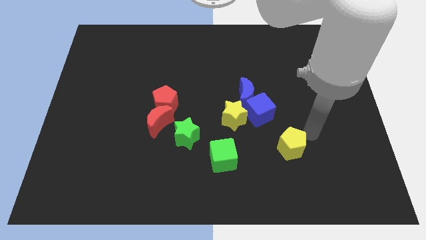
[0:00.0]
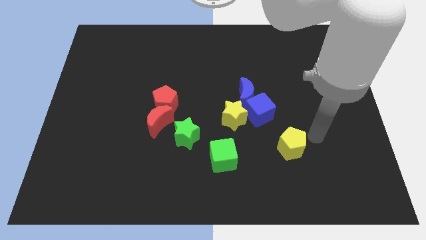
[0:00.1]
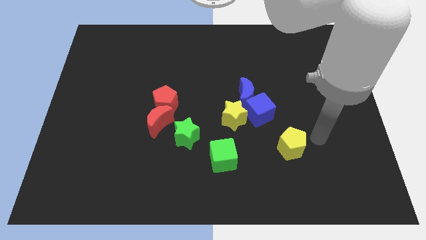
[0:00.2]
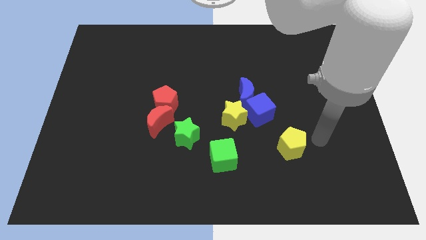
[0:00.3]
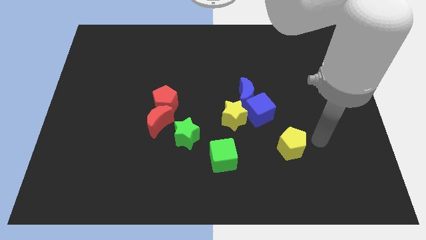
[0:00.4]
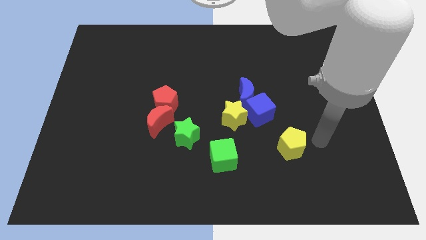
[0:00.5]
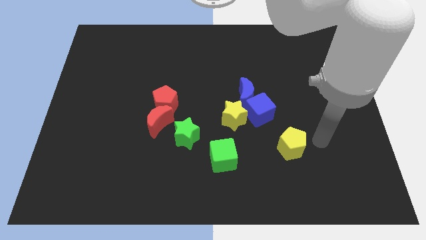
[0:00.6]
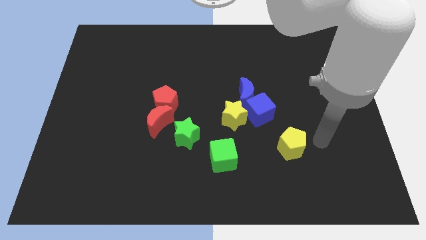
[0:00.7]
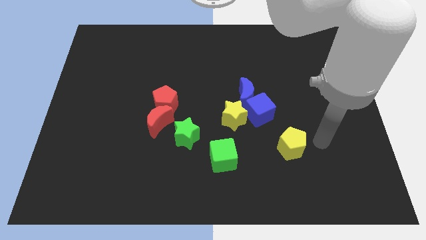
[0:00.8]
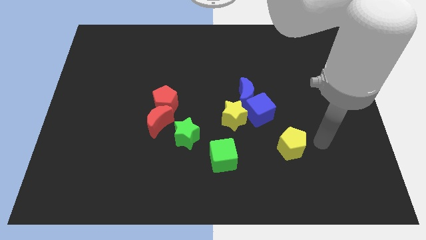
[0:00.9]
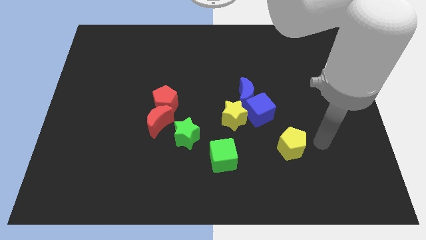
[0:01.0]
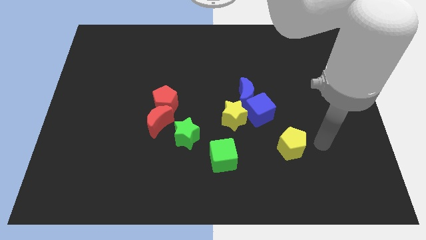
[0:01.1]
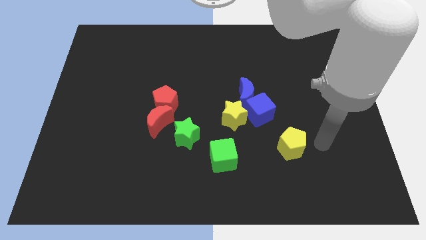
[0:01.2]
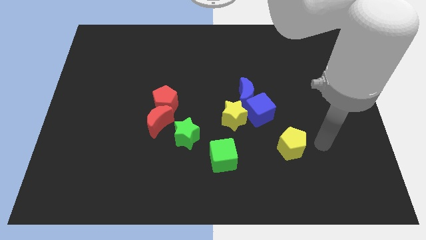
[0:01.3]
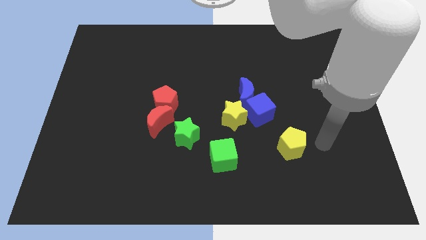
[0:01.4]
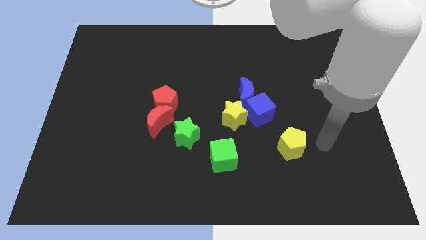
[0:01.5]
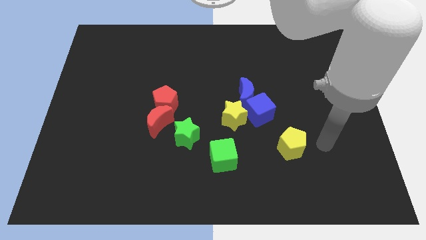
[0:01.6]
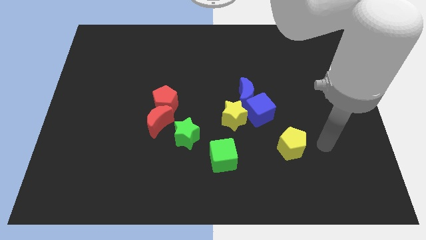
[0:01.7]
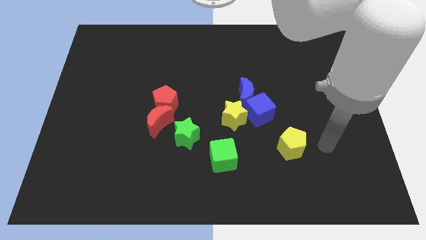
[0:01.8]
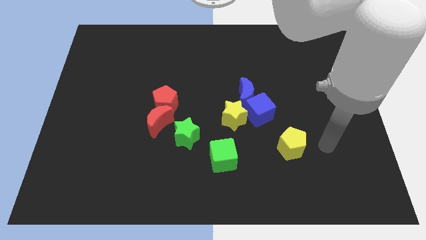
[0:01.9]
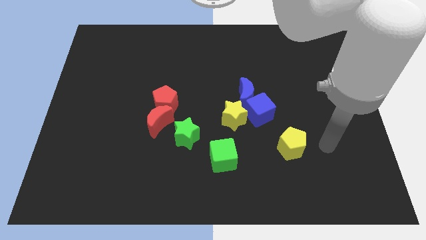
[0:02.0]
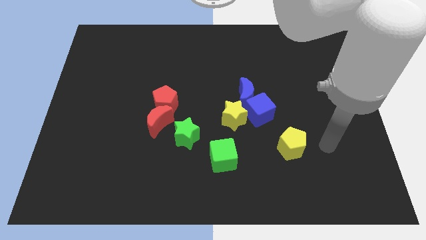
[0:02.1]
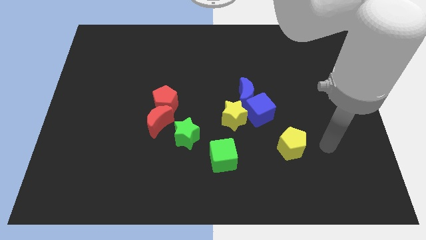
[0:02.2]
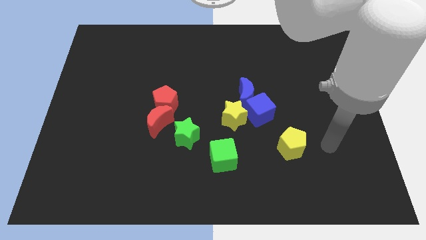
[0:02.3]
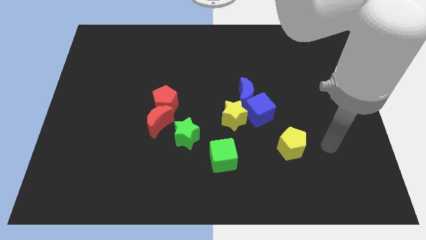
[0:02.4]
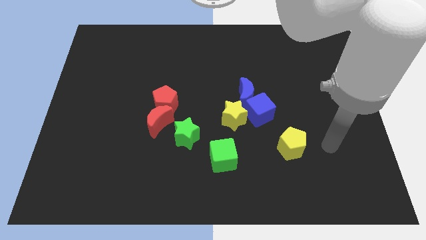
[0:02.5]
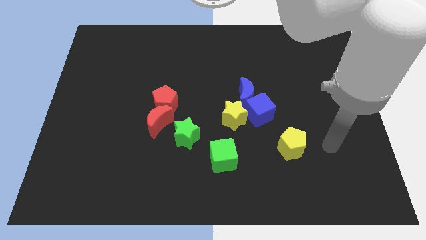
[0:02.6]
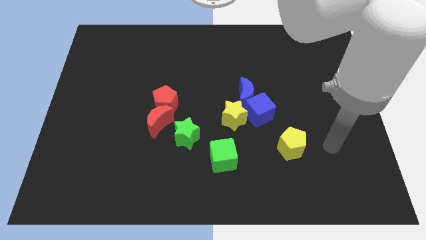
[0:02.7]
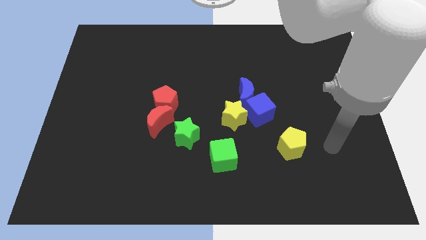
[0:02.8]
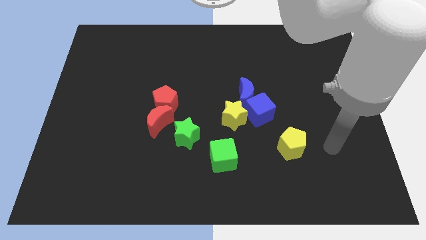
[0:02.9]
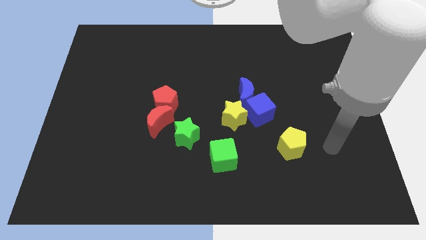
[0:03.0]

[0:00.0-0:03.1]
point your arm at the right of the yellow pentagon

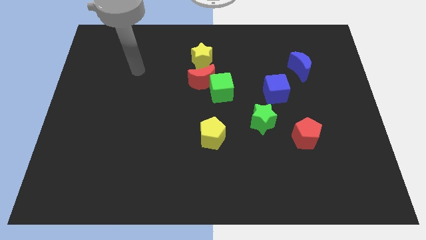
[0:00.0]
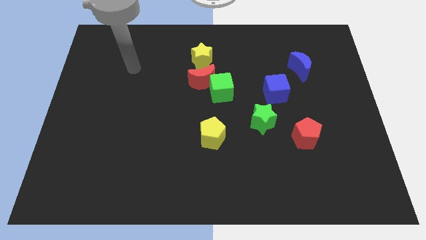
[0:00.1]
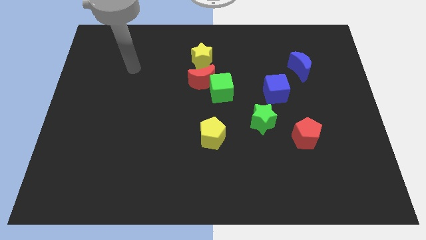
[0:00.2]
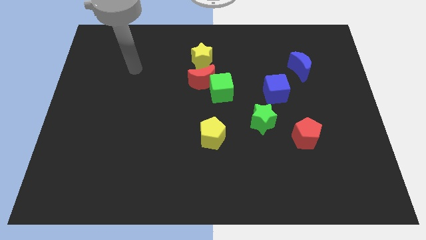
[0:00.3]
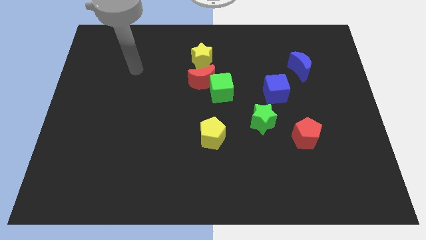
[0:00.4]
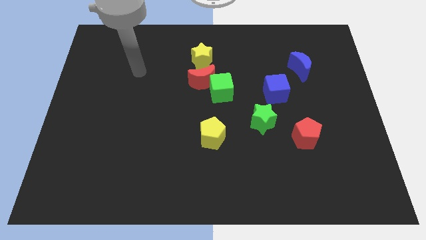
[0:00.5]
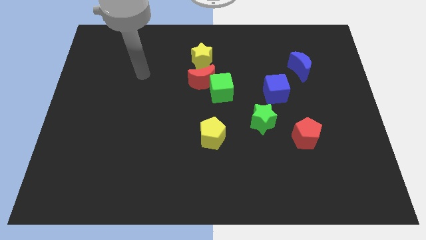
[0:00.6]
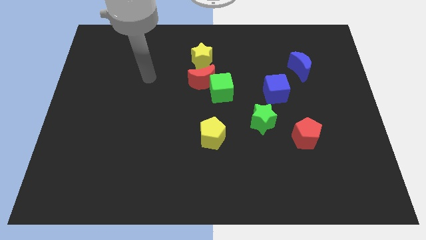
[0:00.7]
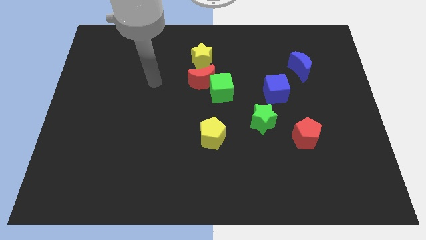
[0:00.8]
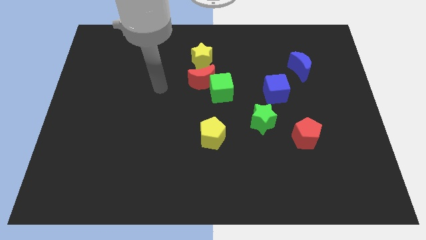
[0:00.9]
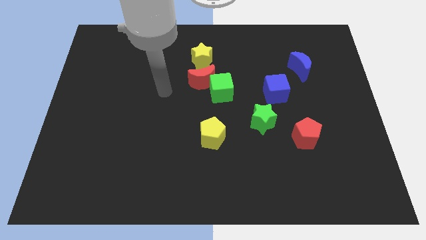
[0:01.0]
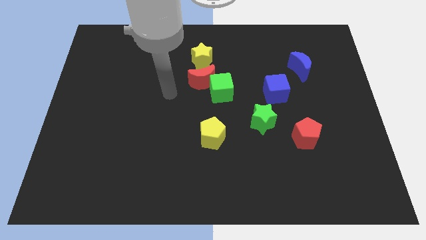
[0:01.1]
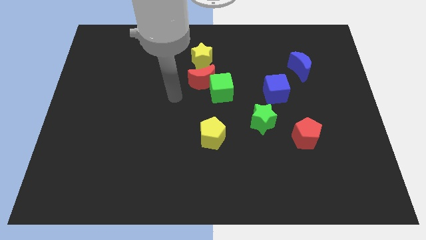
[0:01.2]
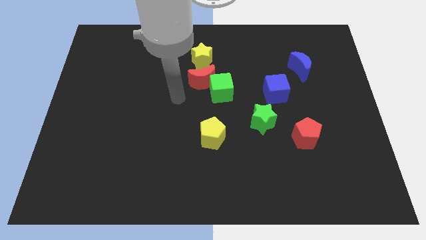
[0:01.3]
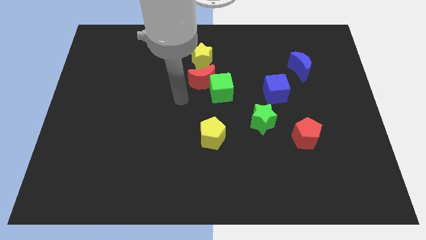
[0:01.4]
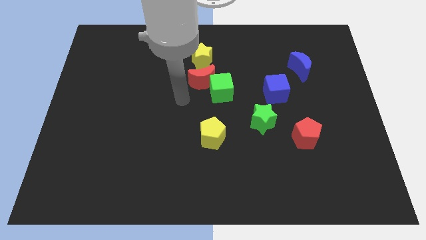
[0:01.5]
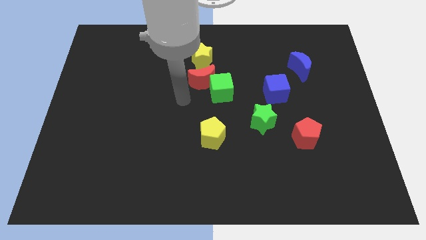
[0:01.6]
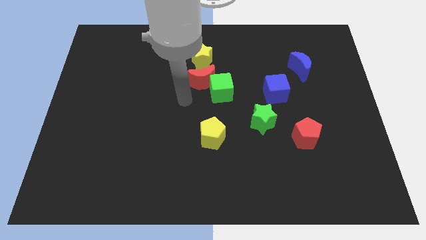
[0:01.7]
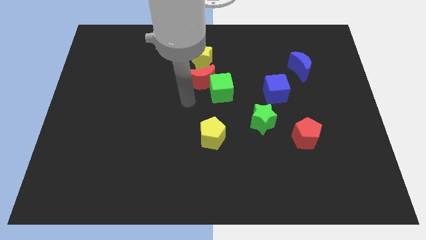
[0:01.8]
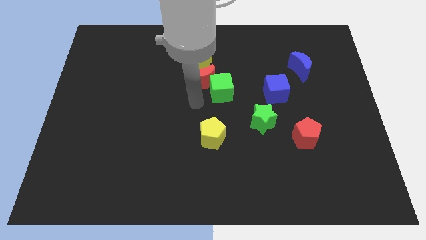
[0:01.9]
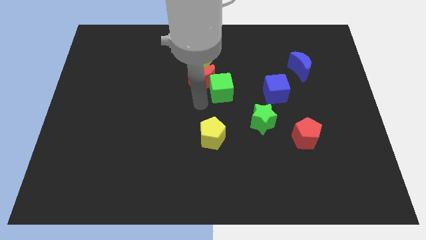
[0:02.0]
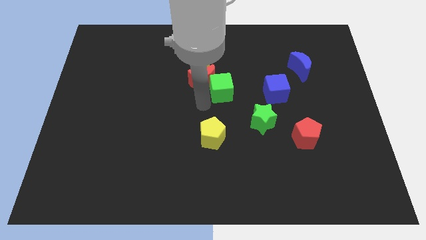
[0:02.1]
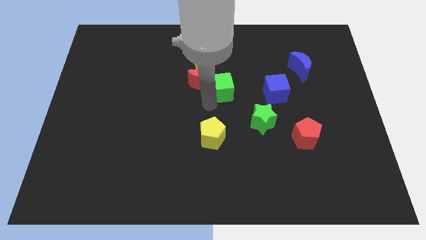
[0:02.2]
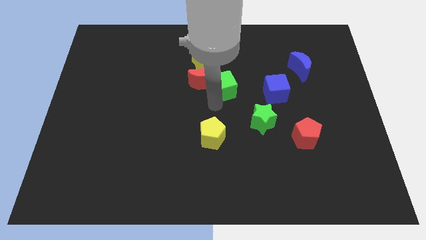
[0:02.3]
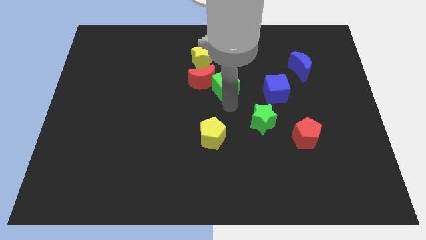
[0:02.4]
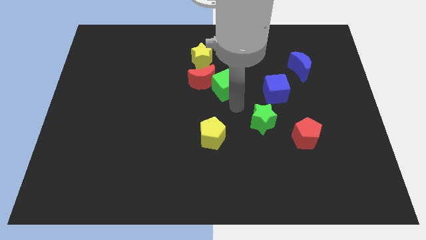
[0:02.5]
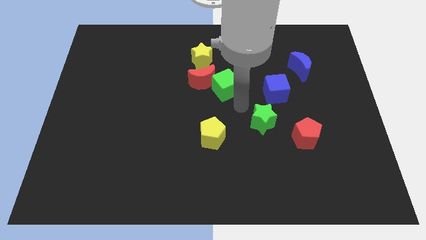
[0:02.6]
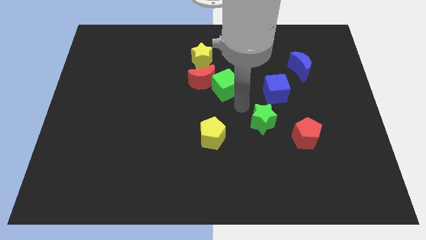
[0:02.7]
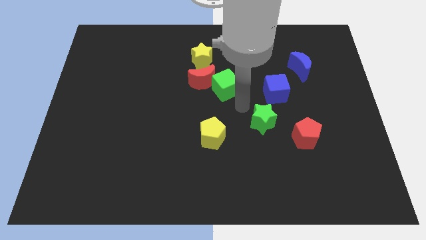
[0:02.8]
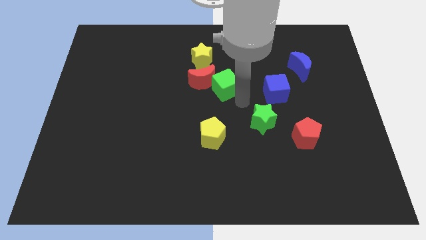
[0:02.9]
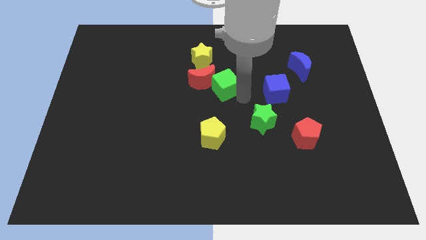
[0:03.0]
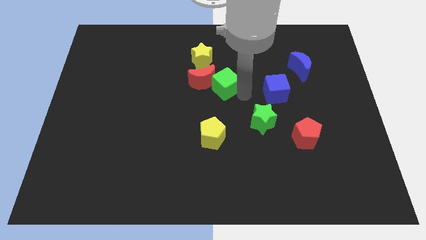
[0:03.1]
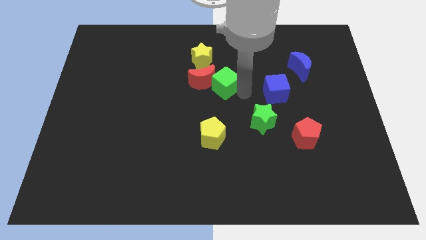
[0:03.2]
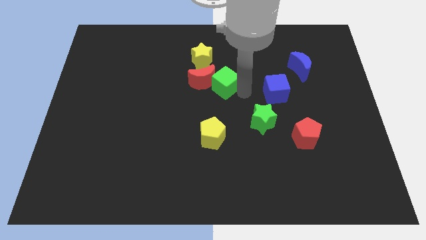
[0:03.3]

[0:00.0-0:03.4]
slightly move the green cube towards right

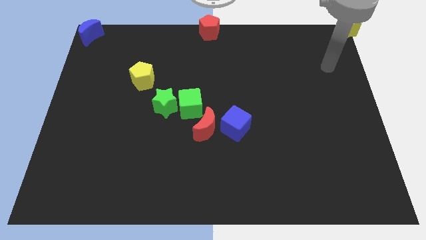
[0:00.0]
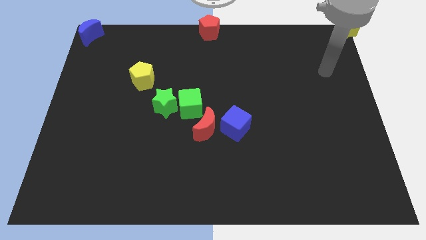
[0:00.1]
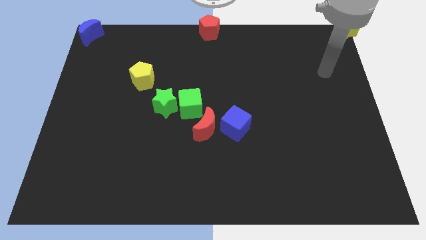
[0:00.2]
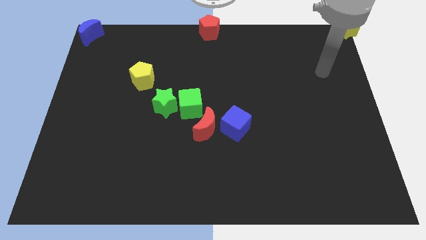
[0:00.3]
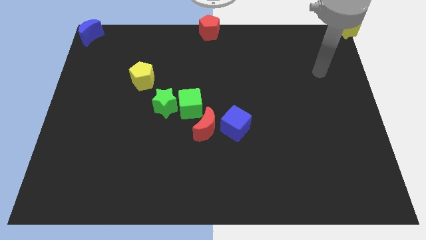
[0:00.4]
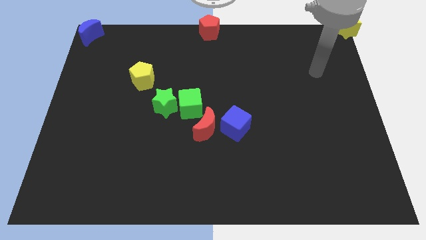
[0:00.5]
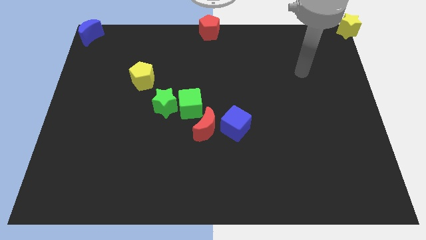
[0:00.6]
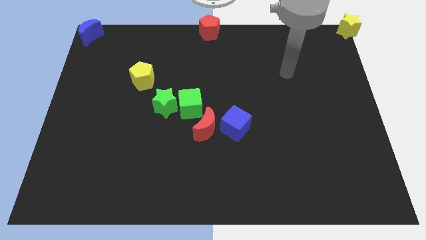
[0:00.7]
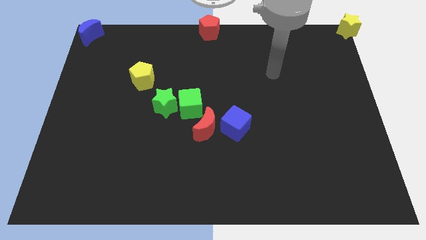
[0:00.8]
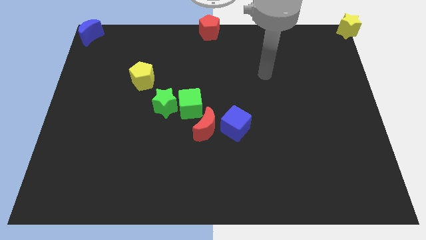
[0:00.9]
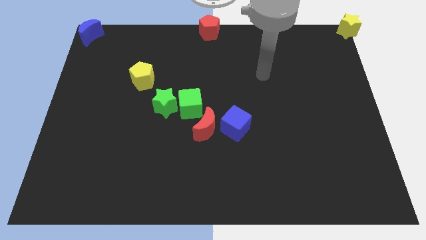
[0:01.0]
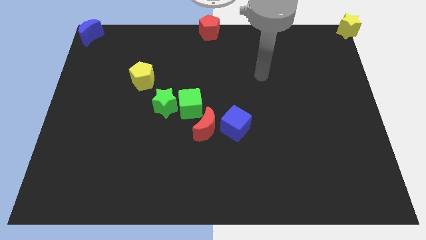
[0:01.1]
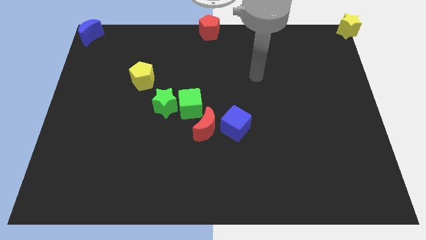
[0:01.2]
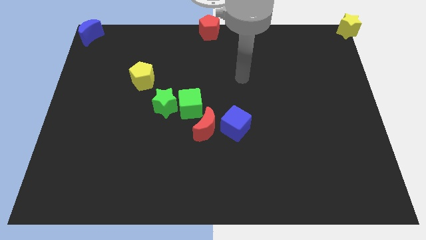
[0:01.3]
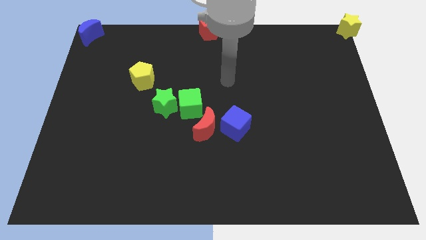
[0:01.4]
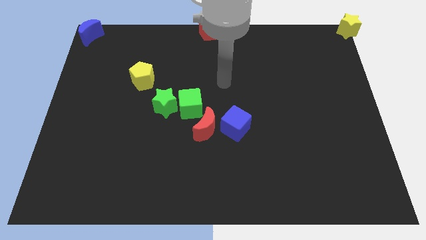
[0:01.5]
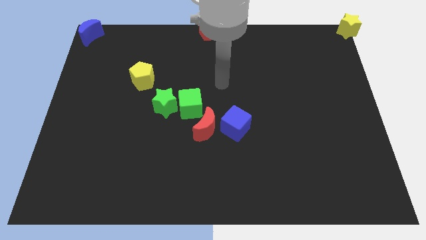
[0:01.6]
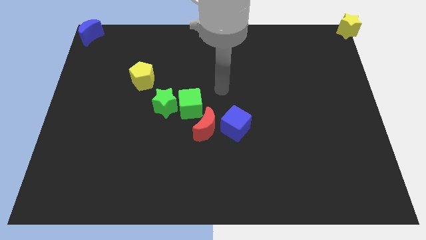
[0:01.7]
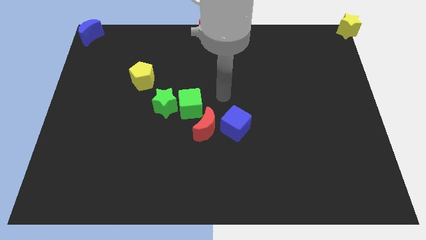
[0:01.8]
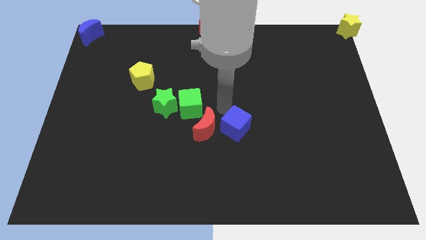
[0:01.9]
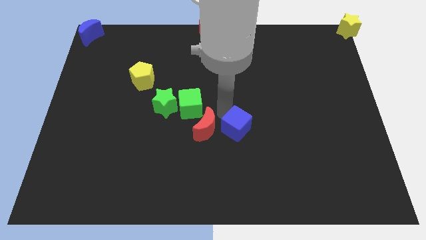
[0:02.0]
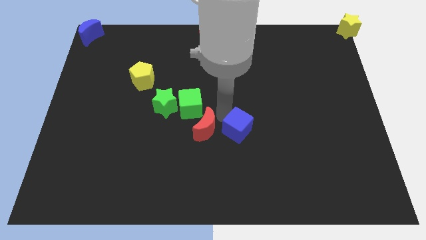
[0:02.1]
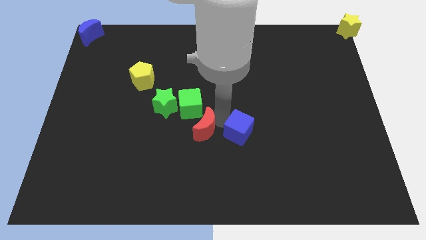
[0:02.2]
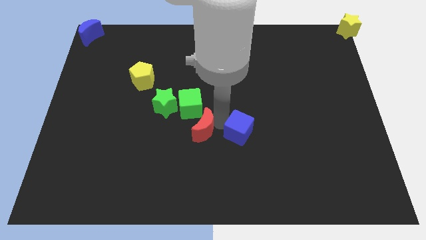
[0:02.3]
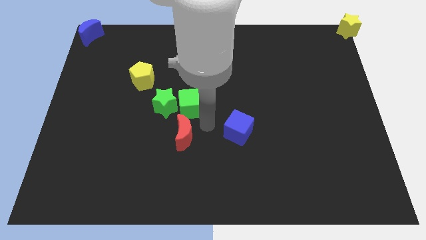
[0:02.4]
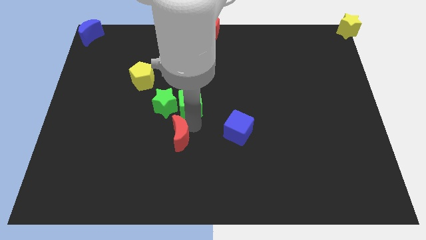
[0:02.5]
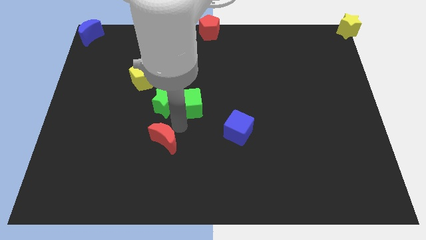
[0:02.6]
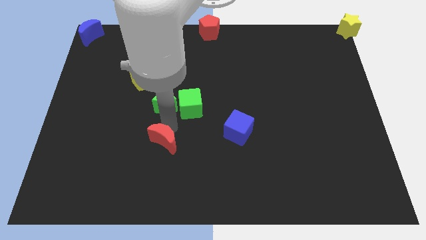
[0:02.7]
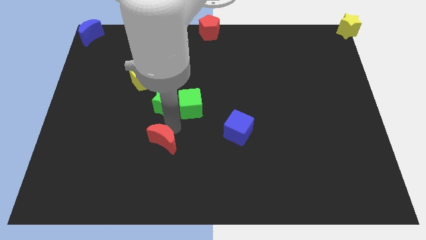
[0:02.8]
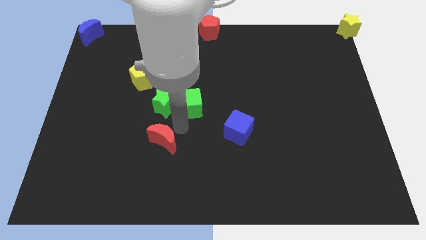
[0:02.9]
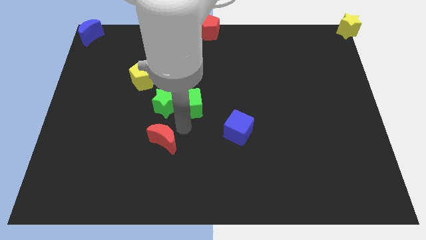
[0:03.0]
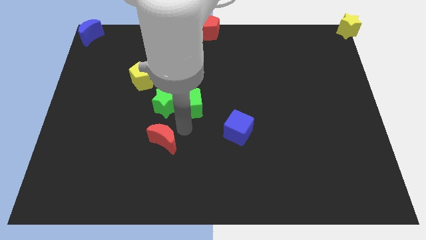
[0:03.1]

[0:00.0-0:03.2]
separate the red crescent and blue cube
